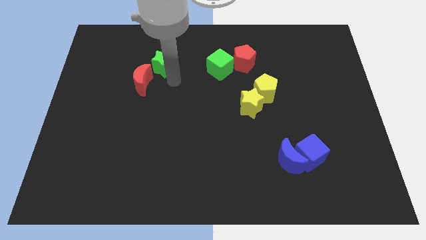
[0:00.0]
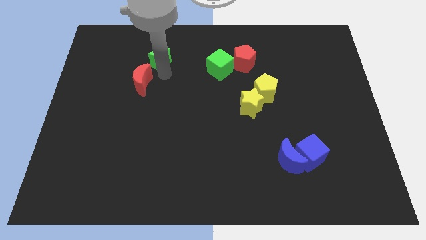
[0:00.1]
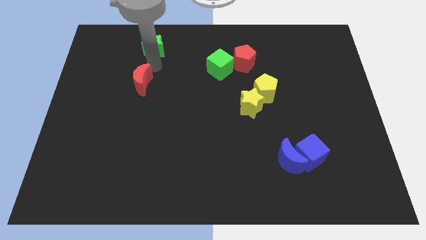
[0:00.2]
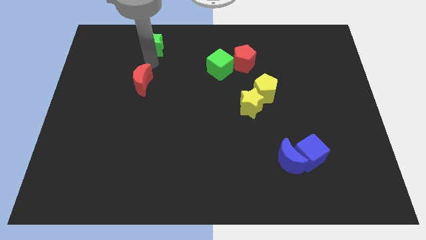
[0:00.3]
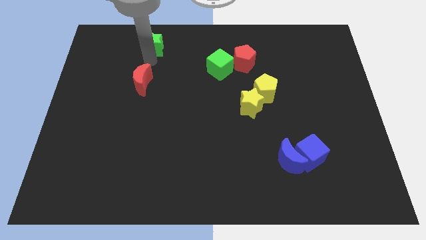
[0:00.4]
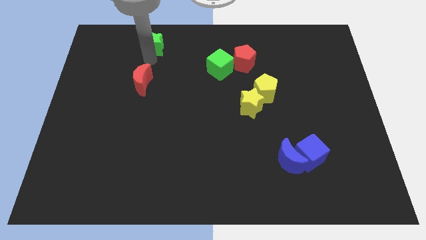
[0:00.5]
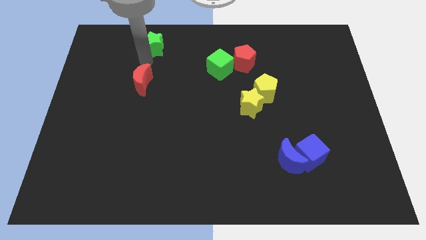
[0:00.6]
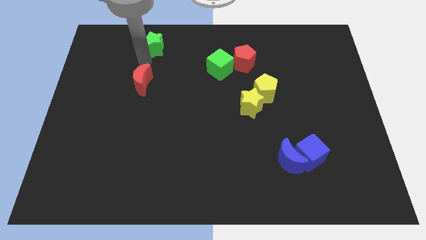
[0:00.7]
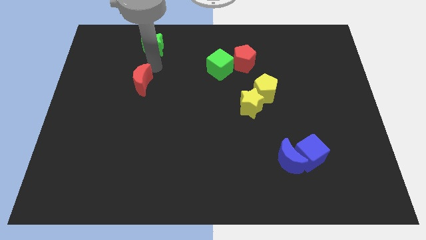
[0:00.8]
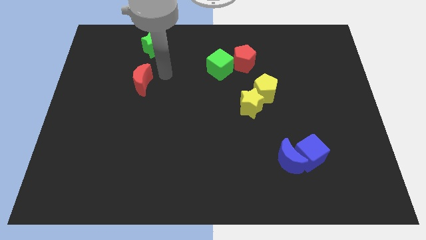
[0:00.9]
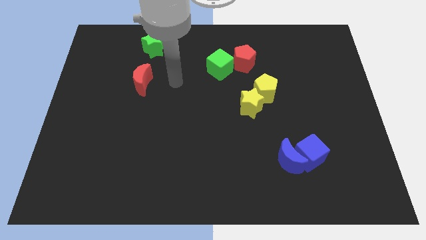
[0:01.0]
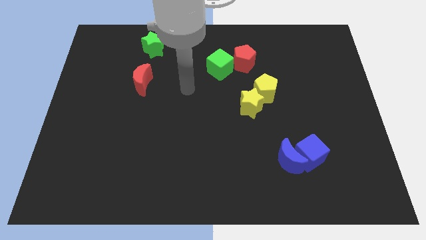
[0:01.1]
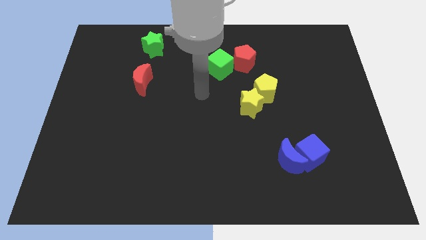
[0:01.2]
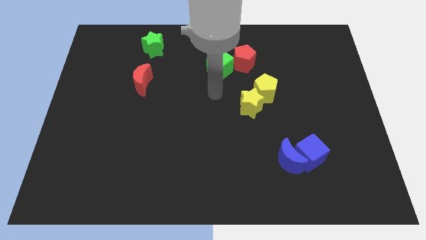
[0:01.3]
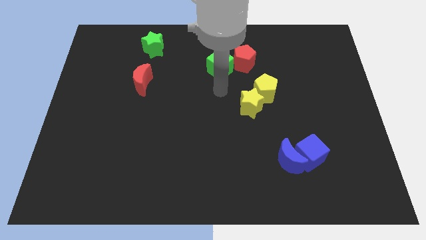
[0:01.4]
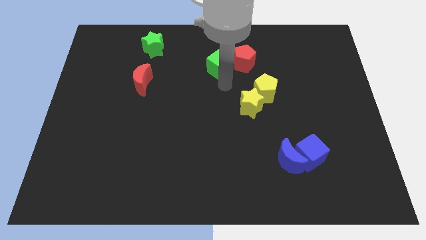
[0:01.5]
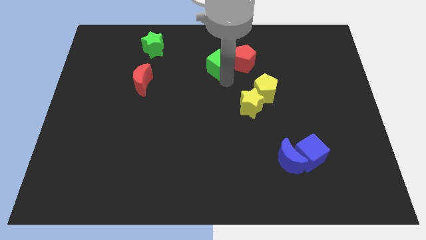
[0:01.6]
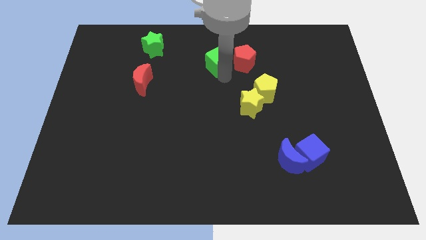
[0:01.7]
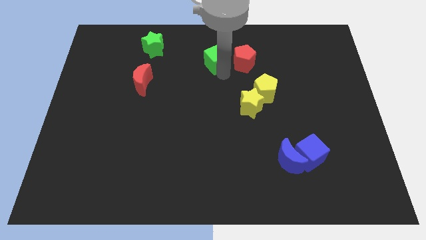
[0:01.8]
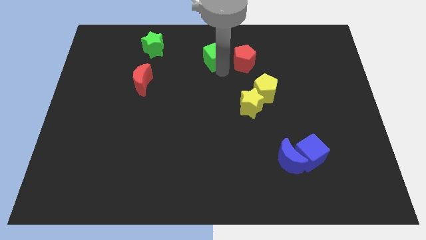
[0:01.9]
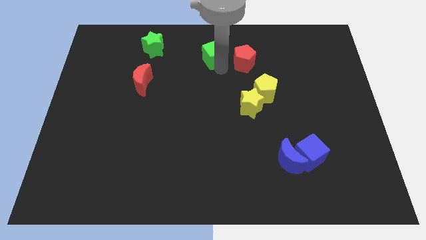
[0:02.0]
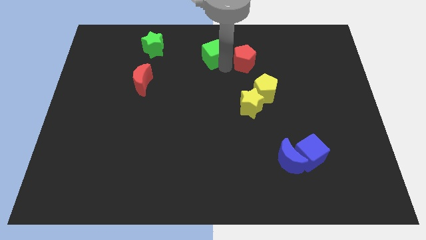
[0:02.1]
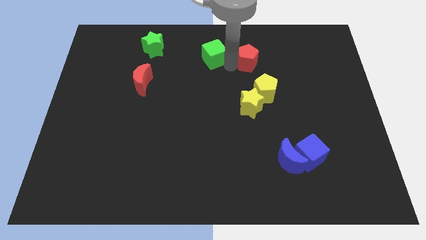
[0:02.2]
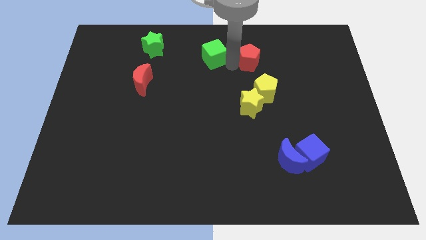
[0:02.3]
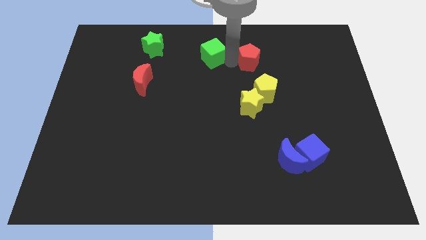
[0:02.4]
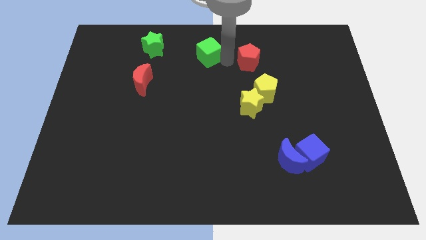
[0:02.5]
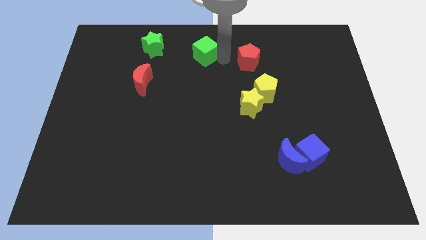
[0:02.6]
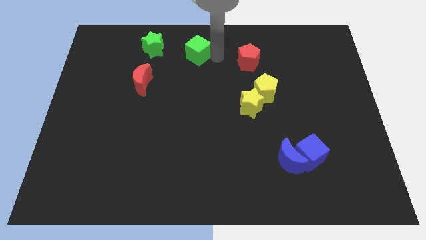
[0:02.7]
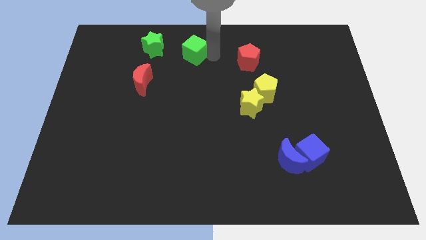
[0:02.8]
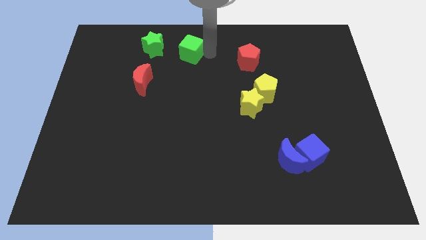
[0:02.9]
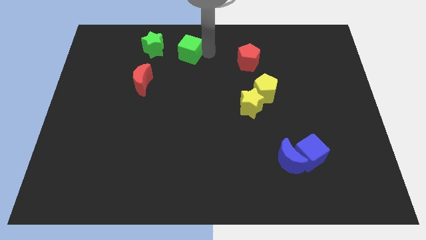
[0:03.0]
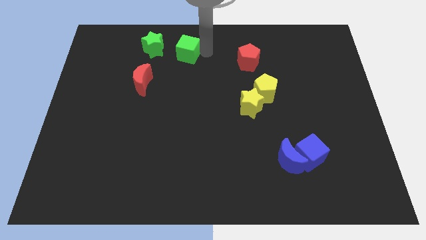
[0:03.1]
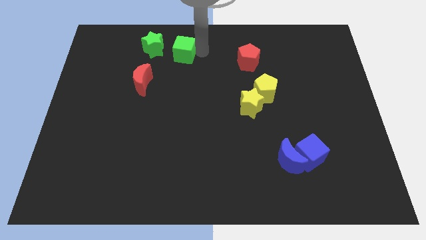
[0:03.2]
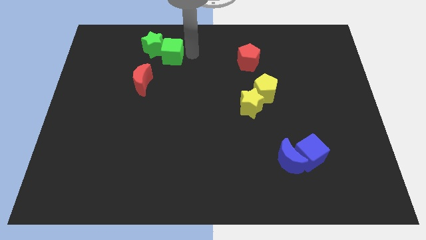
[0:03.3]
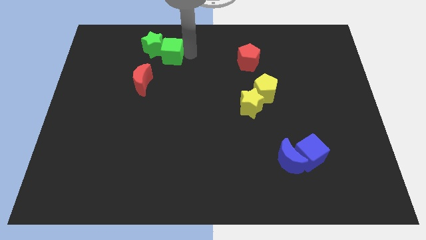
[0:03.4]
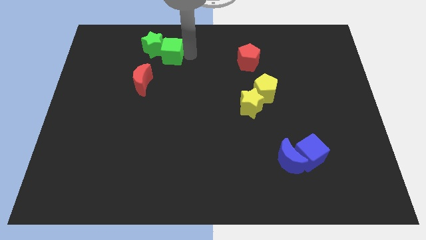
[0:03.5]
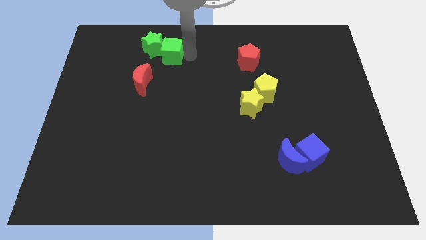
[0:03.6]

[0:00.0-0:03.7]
move the green cube to the right of the green star

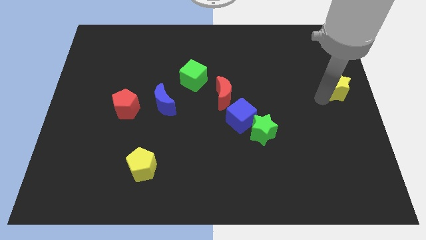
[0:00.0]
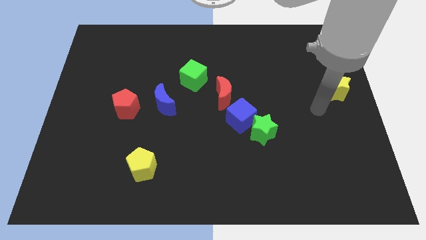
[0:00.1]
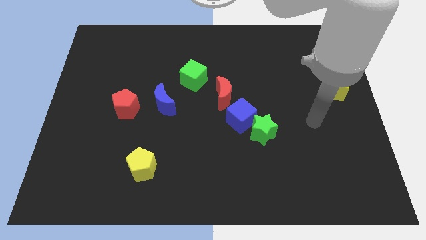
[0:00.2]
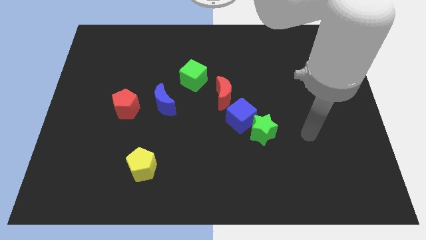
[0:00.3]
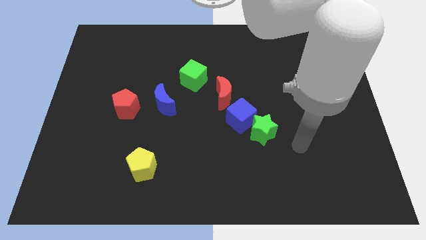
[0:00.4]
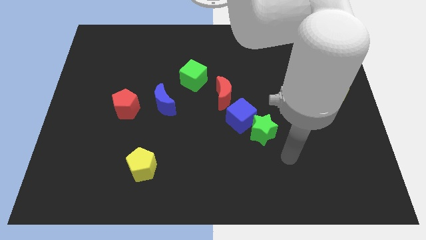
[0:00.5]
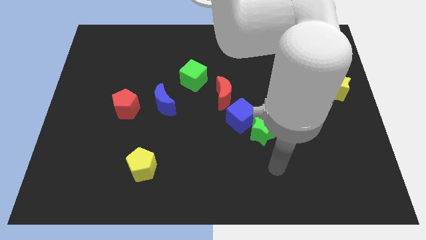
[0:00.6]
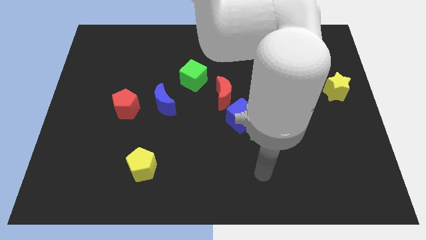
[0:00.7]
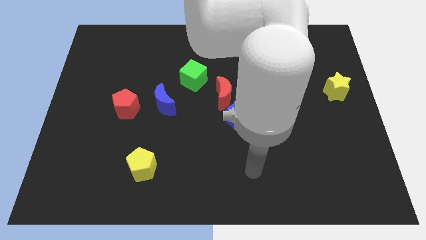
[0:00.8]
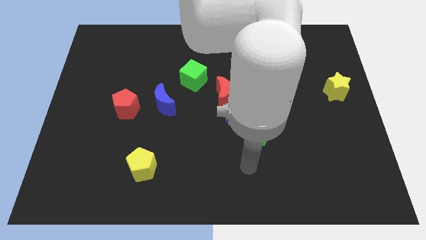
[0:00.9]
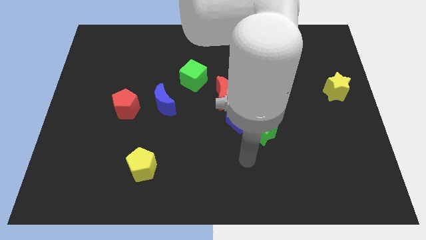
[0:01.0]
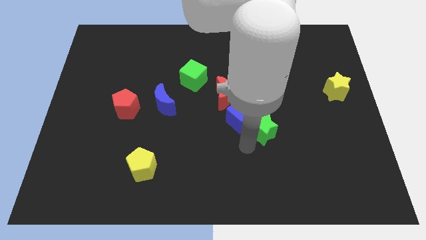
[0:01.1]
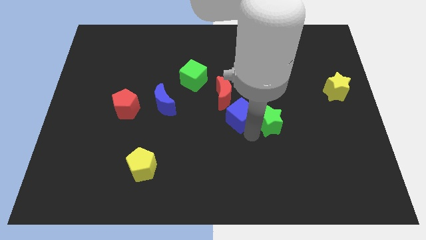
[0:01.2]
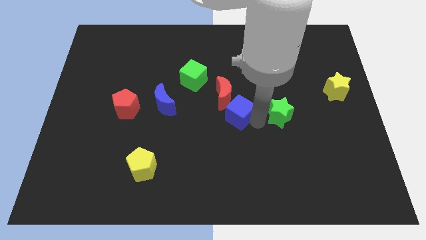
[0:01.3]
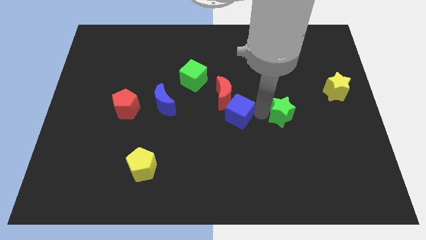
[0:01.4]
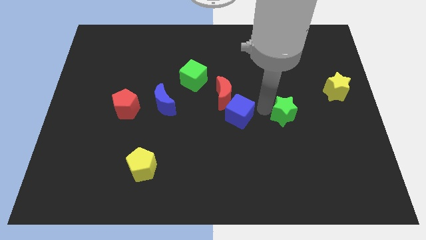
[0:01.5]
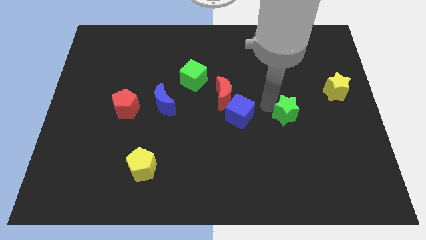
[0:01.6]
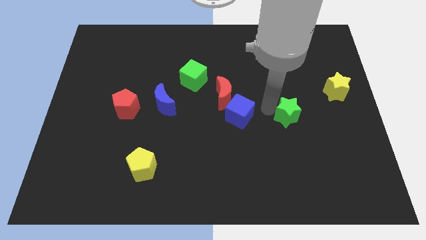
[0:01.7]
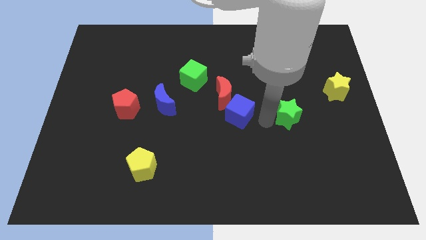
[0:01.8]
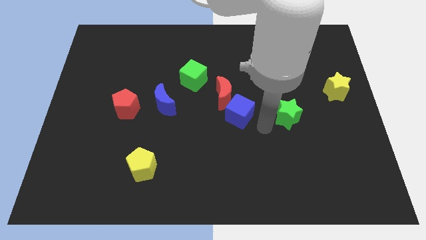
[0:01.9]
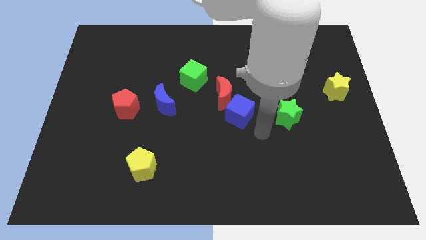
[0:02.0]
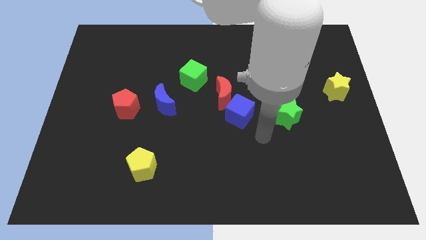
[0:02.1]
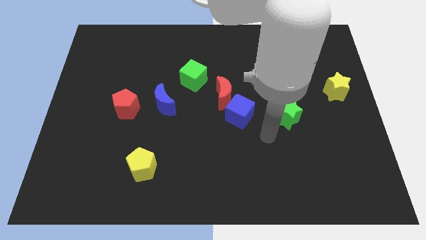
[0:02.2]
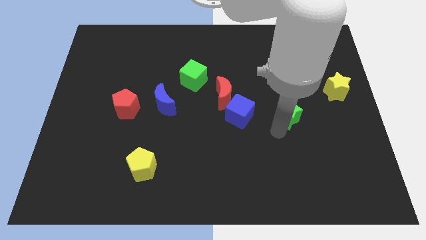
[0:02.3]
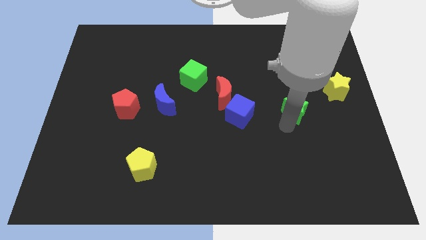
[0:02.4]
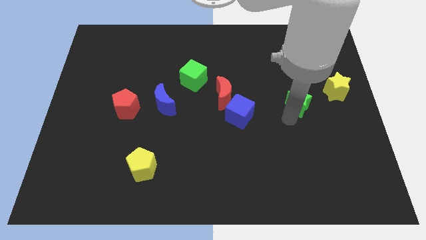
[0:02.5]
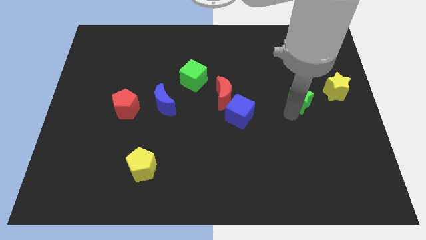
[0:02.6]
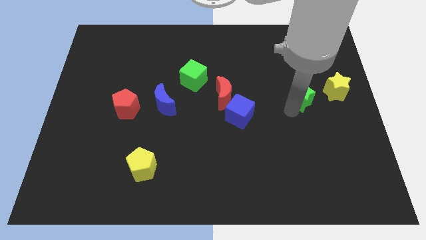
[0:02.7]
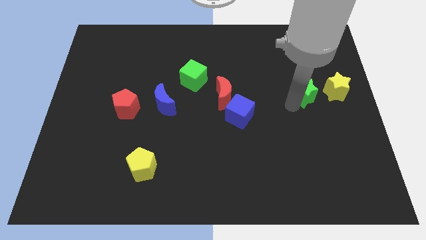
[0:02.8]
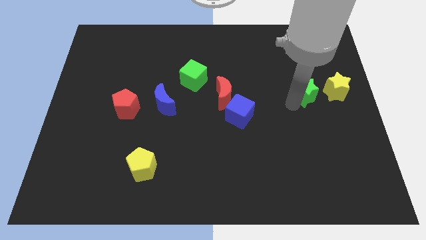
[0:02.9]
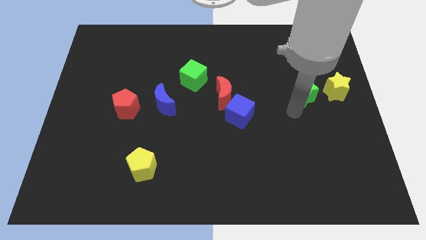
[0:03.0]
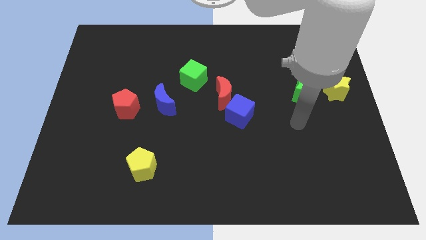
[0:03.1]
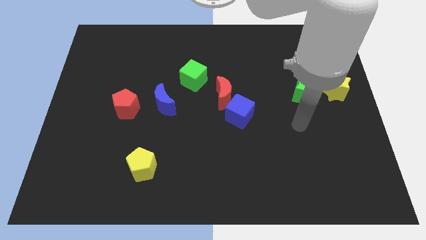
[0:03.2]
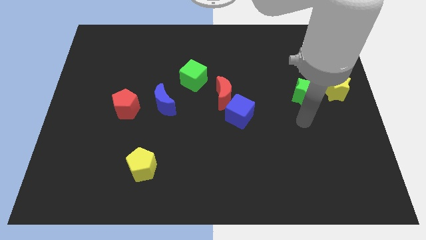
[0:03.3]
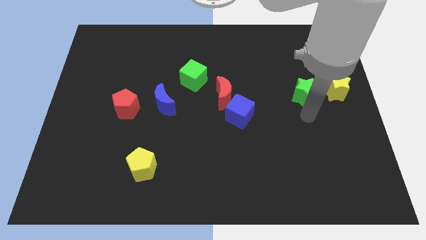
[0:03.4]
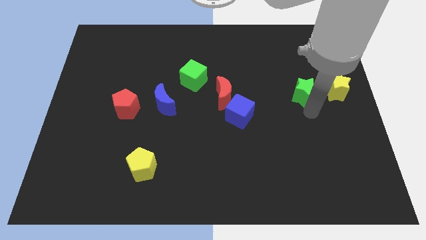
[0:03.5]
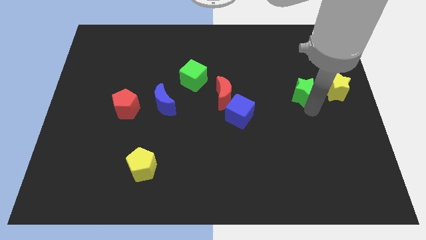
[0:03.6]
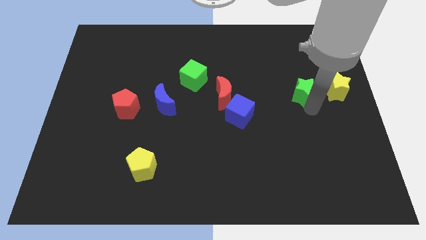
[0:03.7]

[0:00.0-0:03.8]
place the green star to the right side of the red crescent

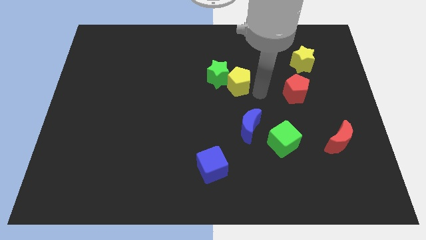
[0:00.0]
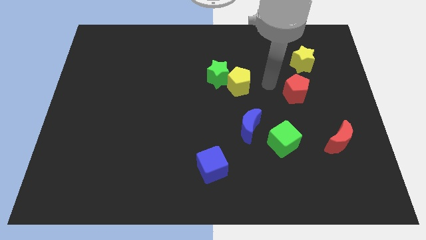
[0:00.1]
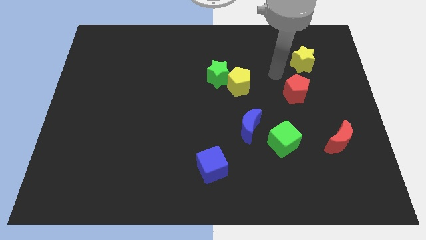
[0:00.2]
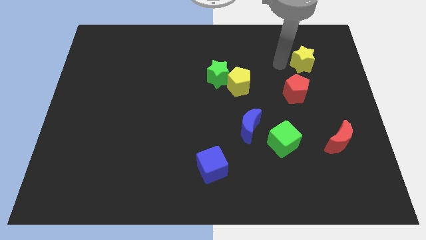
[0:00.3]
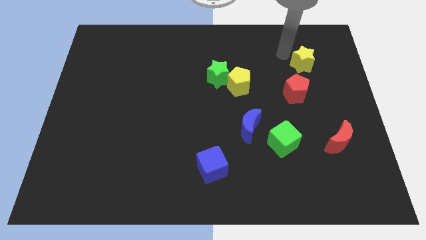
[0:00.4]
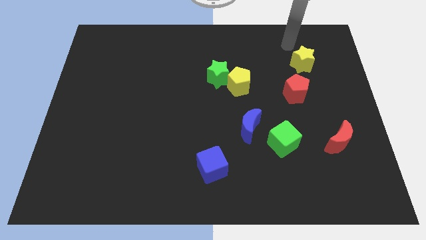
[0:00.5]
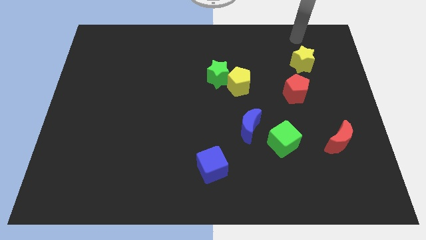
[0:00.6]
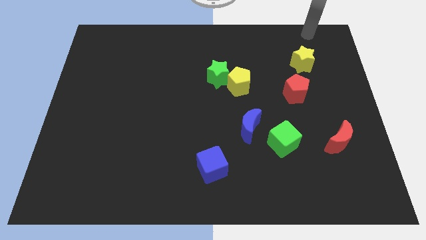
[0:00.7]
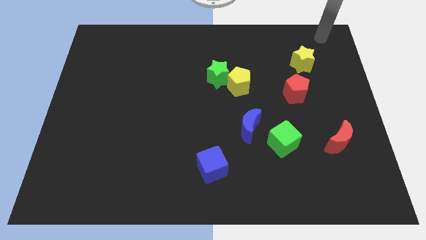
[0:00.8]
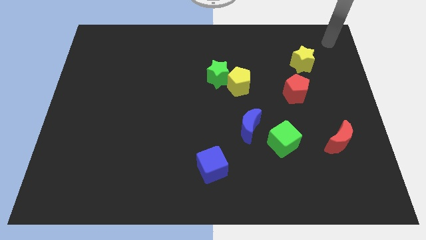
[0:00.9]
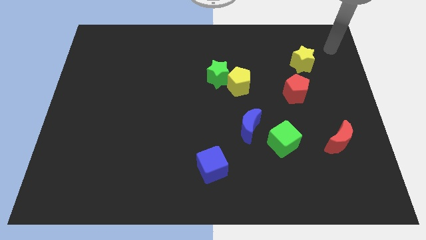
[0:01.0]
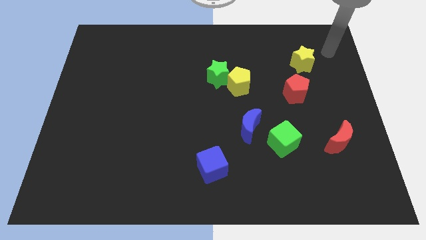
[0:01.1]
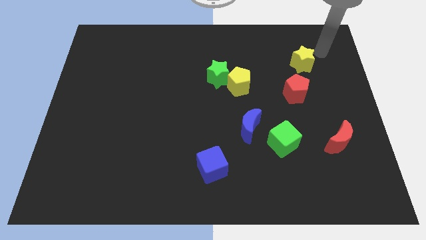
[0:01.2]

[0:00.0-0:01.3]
point your hand at the top right side of the yellow pentagon
